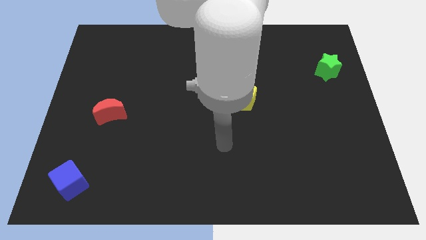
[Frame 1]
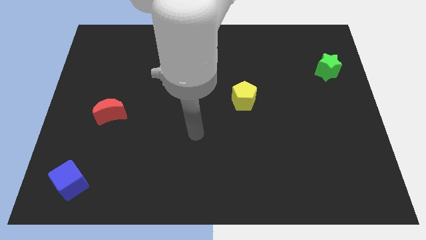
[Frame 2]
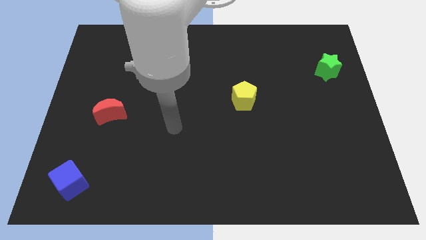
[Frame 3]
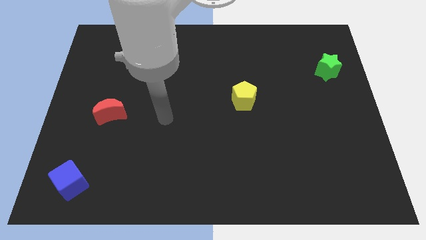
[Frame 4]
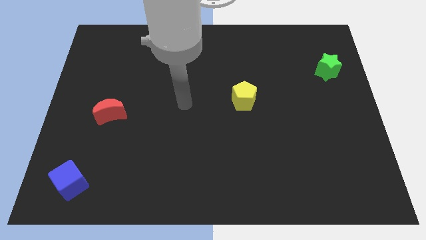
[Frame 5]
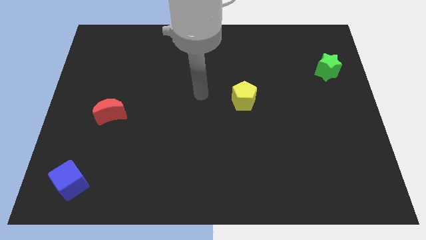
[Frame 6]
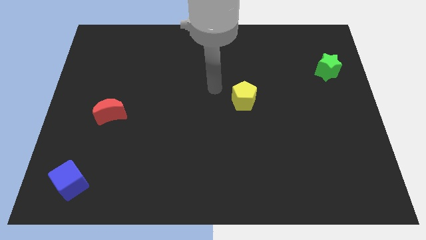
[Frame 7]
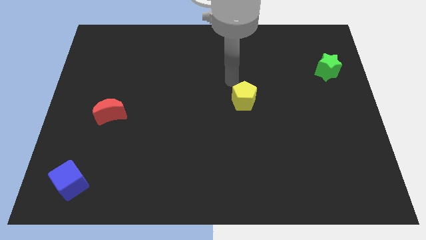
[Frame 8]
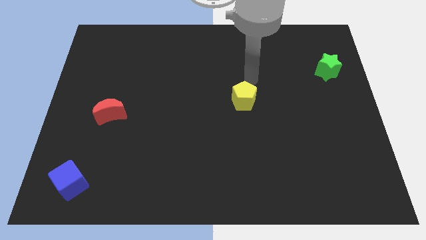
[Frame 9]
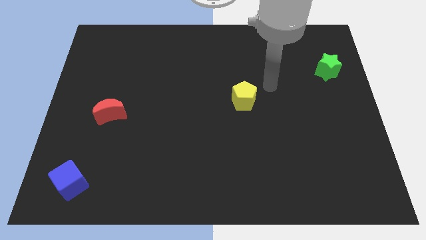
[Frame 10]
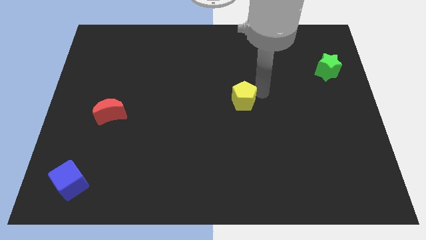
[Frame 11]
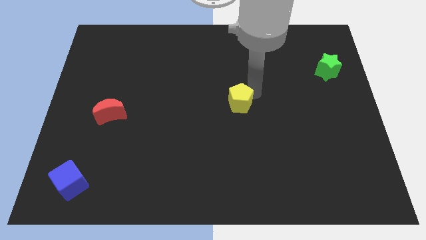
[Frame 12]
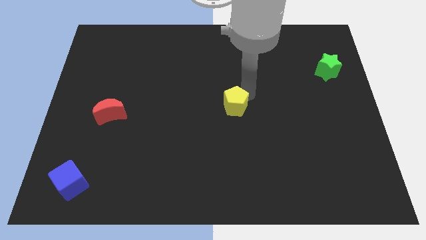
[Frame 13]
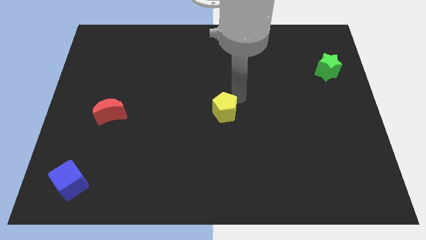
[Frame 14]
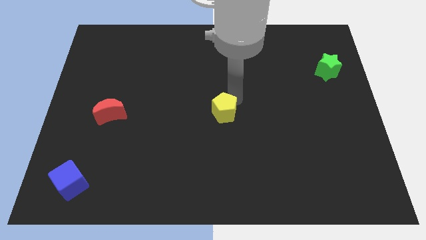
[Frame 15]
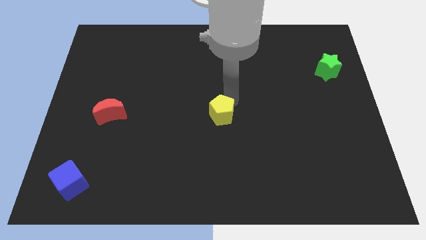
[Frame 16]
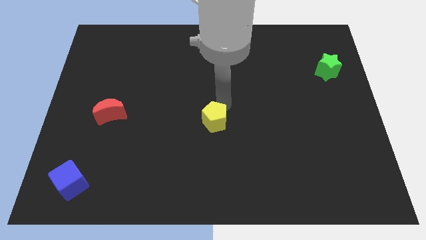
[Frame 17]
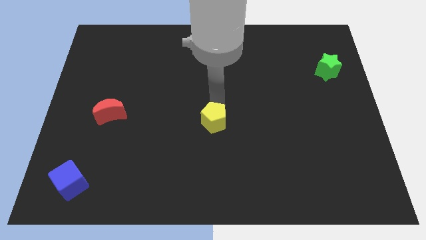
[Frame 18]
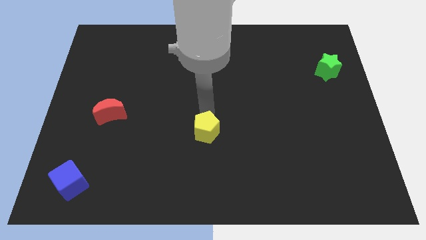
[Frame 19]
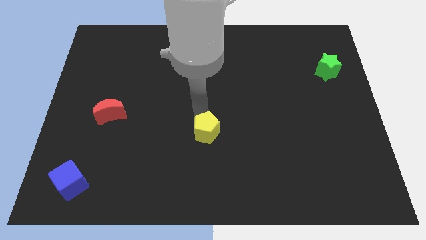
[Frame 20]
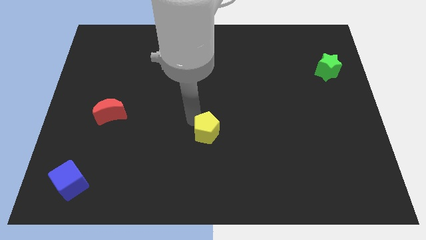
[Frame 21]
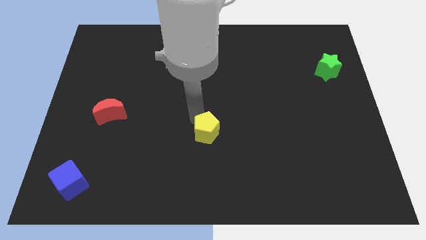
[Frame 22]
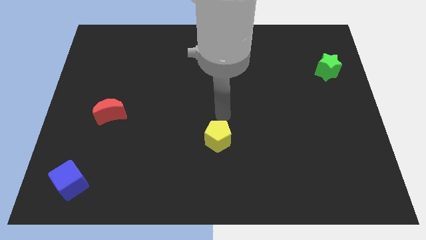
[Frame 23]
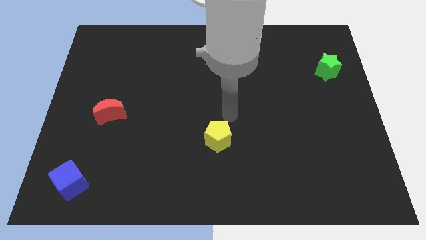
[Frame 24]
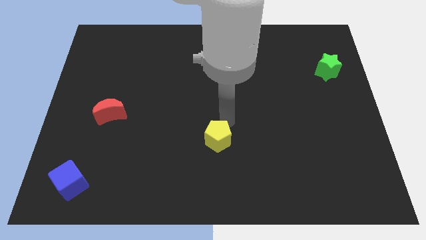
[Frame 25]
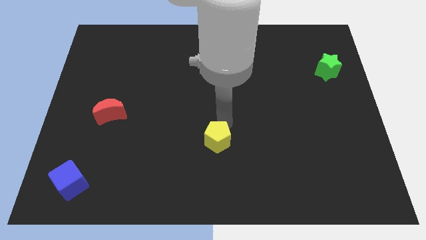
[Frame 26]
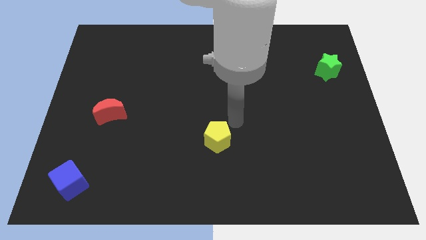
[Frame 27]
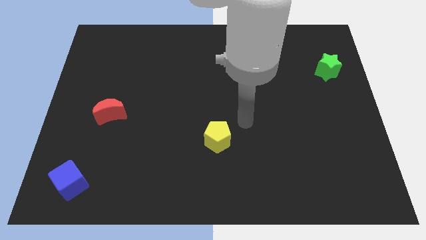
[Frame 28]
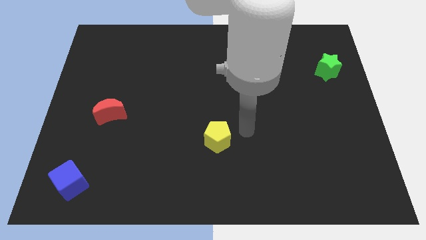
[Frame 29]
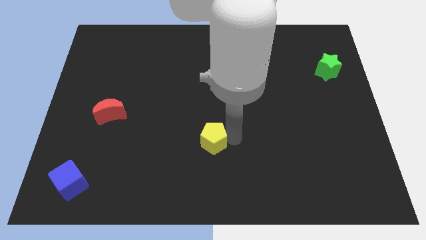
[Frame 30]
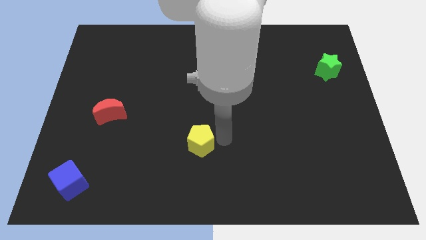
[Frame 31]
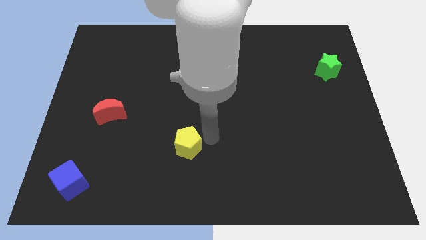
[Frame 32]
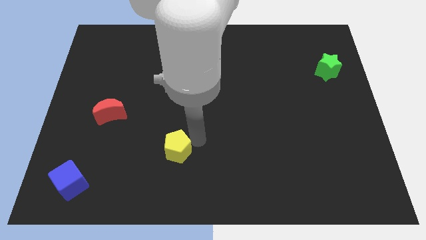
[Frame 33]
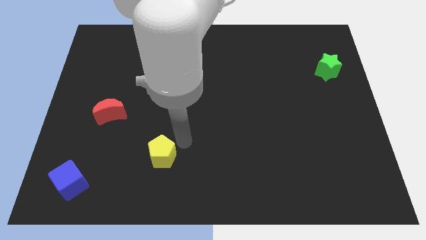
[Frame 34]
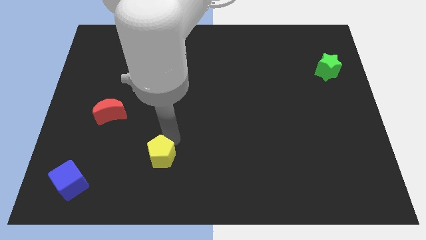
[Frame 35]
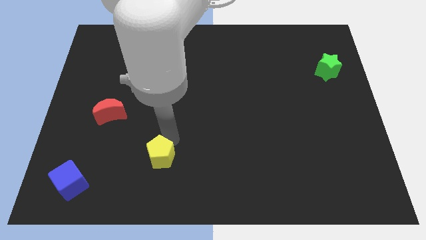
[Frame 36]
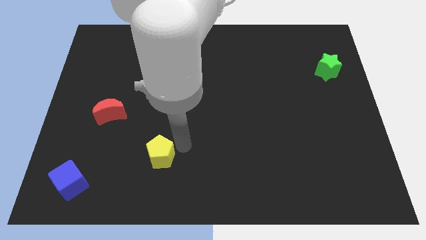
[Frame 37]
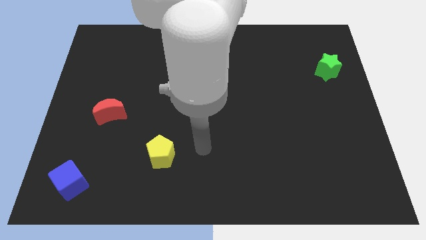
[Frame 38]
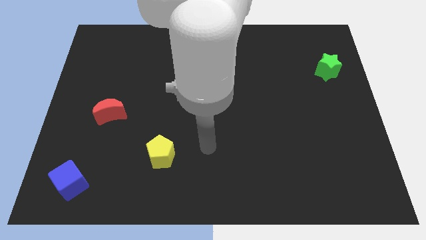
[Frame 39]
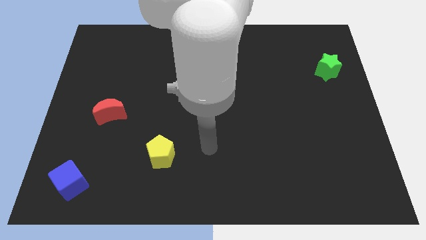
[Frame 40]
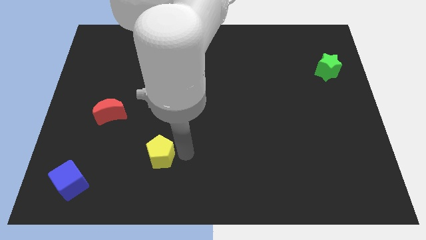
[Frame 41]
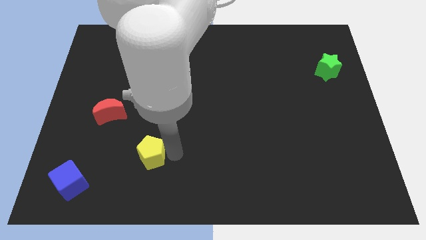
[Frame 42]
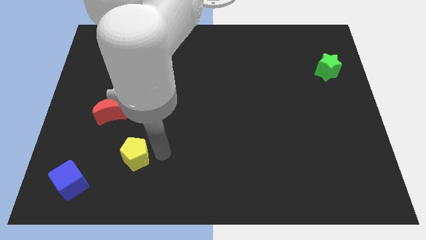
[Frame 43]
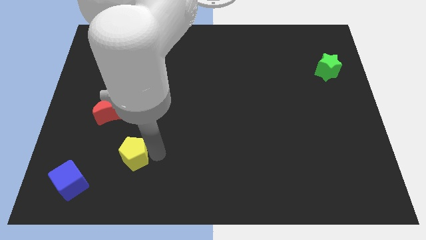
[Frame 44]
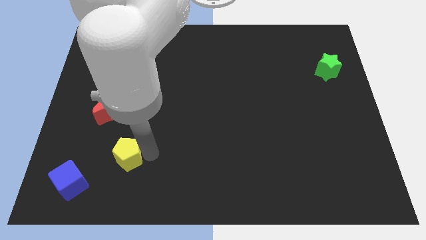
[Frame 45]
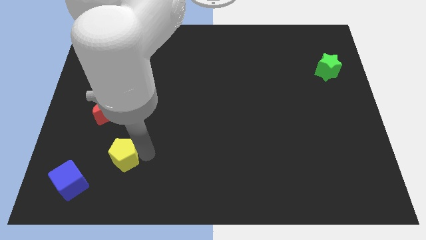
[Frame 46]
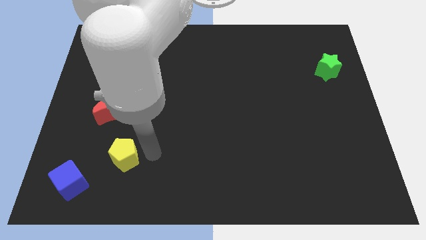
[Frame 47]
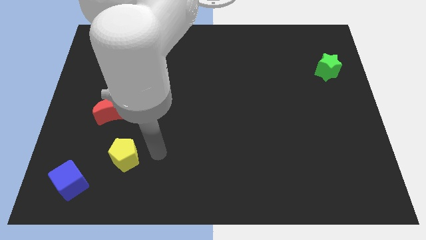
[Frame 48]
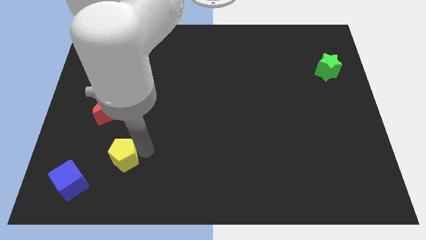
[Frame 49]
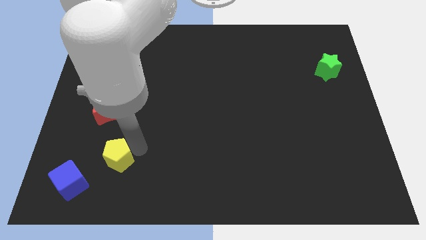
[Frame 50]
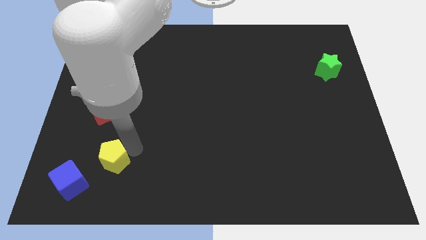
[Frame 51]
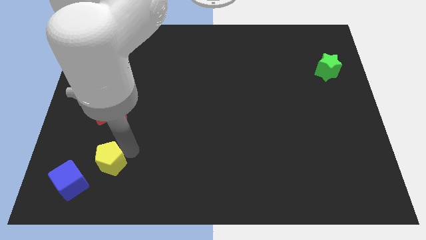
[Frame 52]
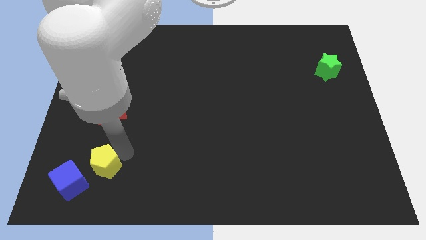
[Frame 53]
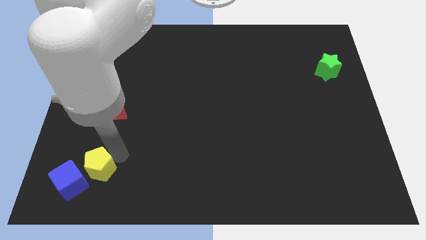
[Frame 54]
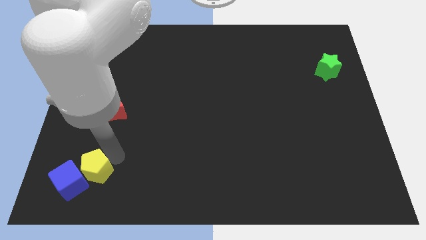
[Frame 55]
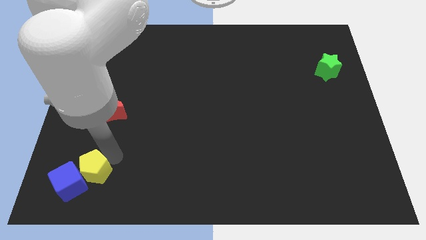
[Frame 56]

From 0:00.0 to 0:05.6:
push the yellow pentagon close to the cube

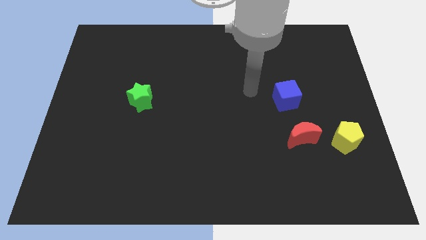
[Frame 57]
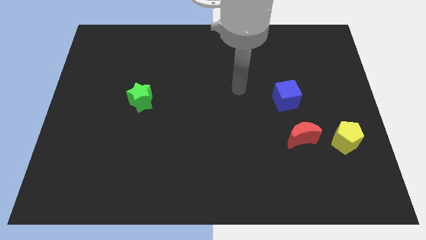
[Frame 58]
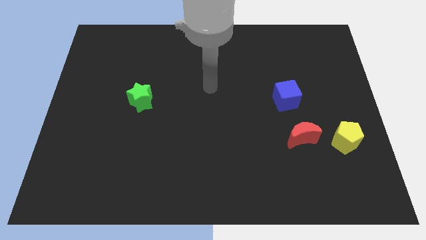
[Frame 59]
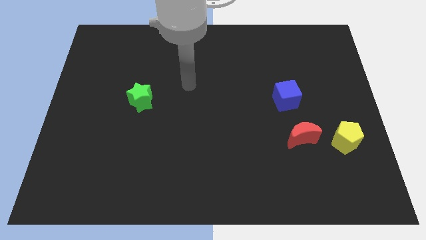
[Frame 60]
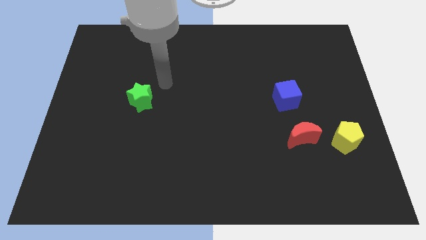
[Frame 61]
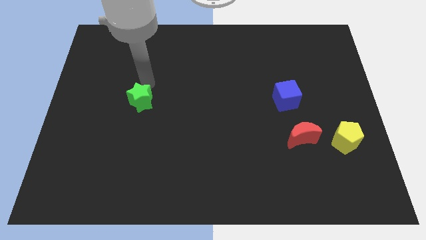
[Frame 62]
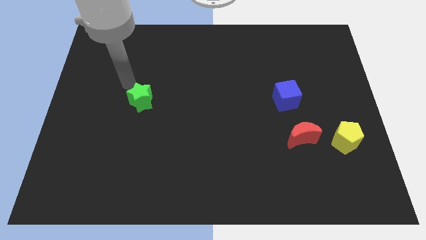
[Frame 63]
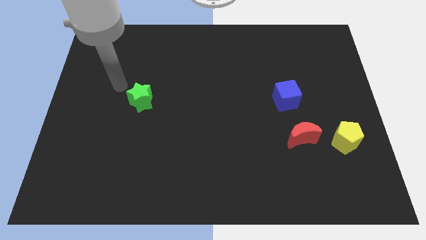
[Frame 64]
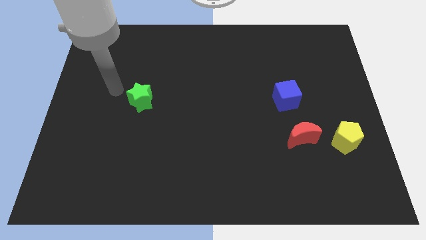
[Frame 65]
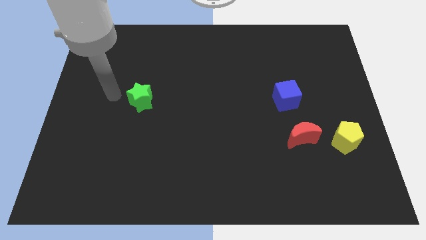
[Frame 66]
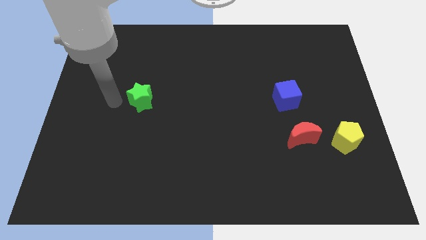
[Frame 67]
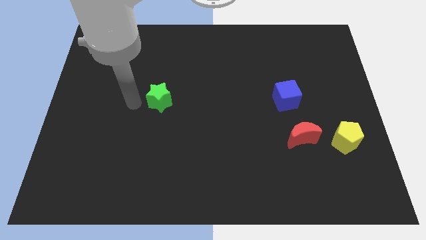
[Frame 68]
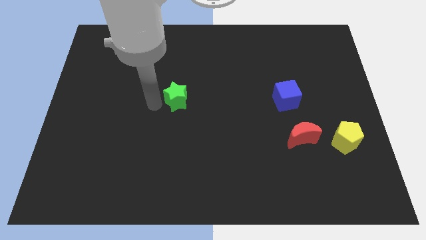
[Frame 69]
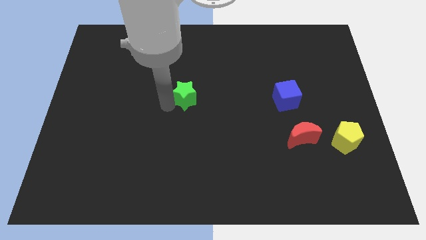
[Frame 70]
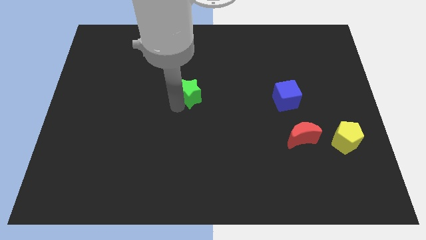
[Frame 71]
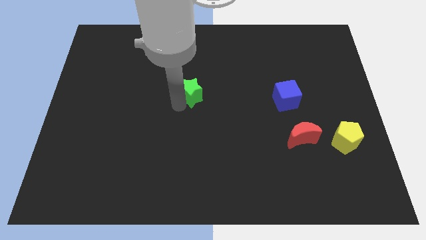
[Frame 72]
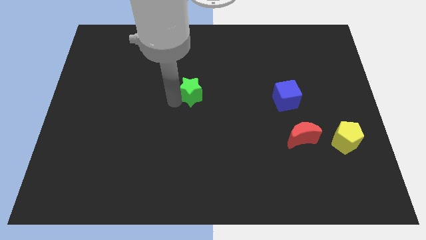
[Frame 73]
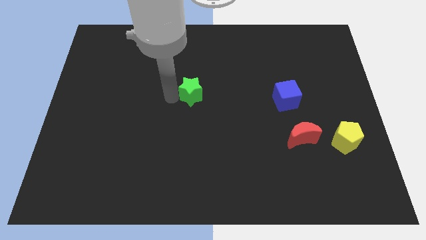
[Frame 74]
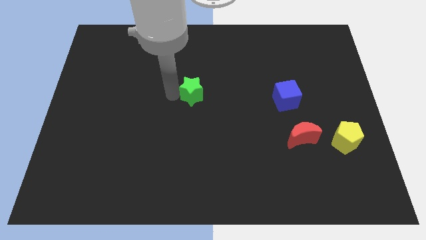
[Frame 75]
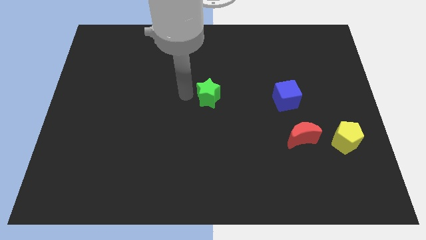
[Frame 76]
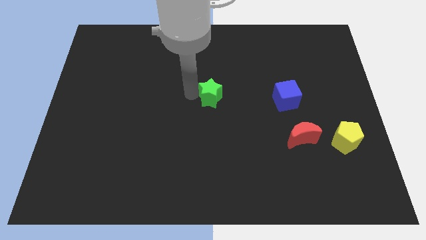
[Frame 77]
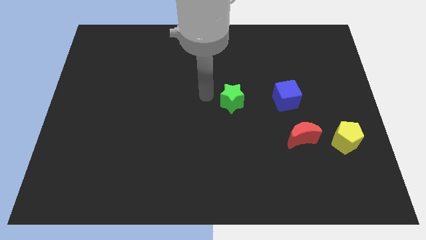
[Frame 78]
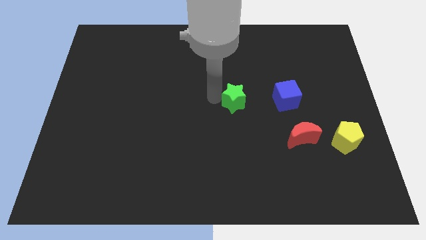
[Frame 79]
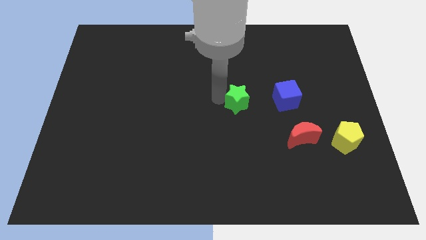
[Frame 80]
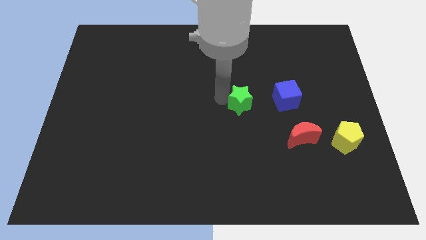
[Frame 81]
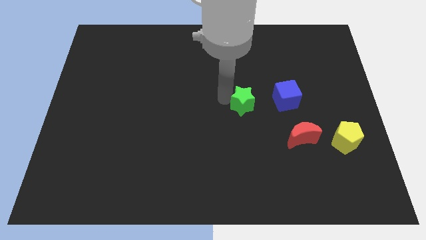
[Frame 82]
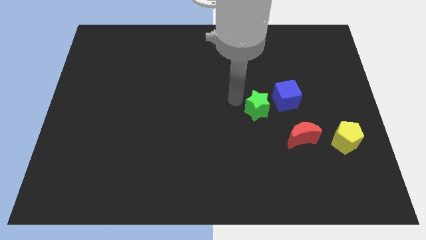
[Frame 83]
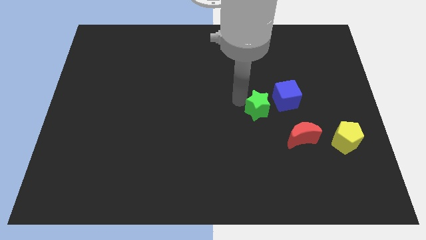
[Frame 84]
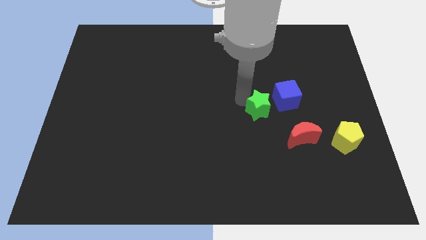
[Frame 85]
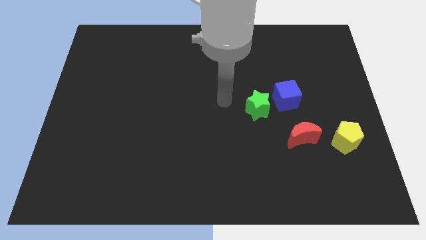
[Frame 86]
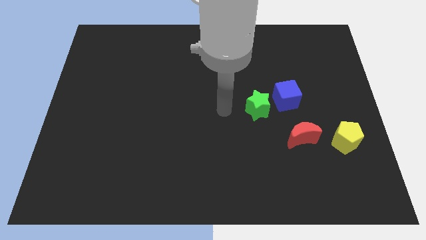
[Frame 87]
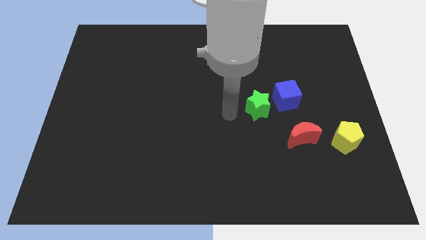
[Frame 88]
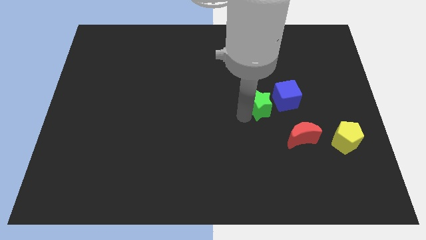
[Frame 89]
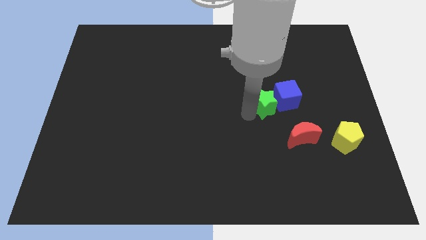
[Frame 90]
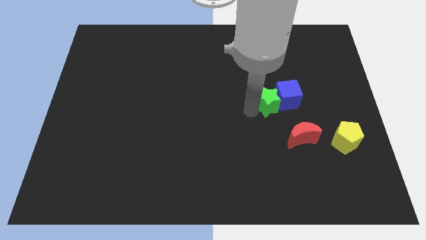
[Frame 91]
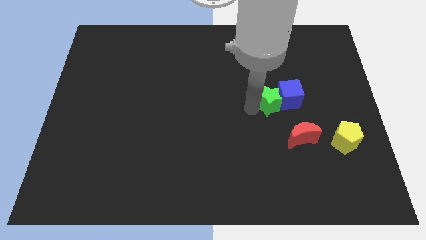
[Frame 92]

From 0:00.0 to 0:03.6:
put the star close to the blue block
